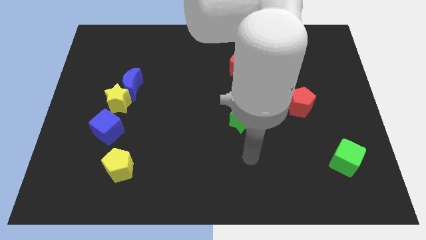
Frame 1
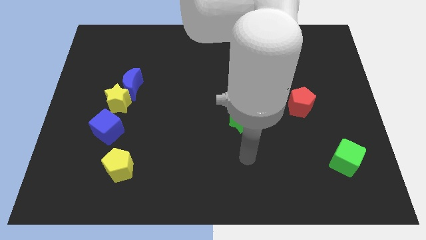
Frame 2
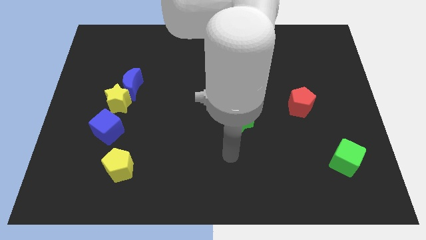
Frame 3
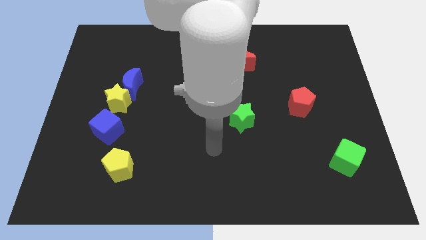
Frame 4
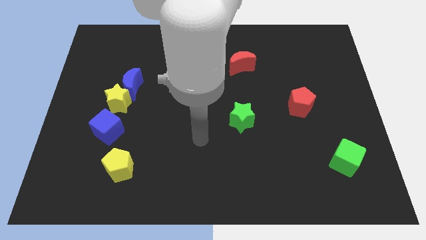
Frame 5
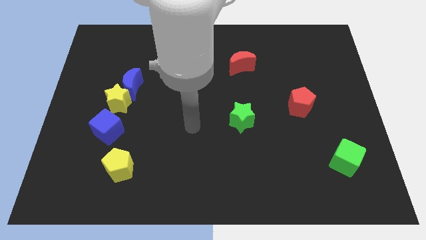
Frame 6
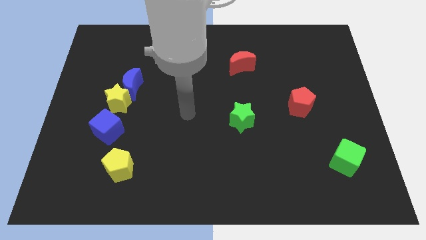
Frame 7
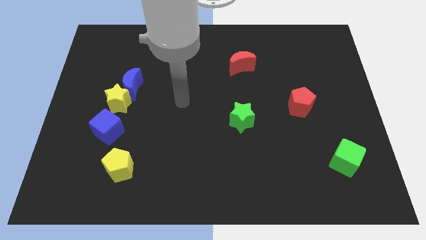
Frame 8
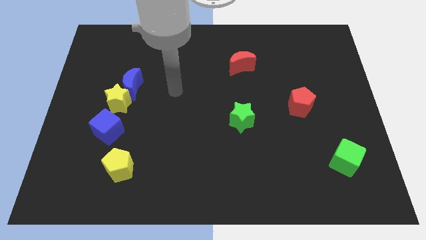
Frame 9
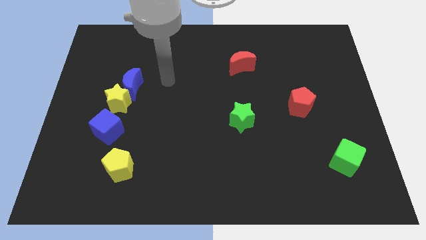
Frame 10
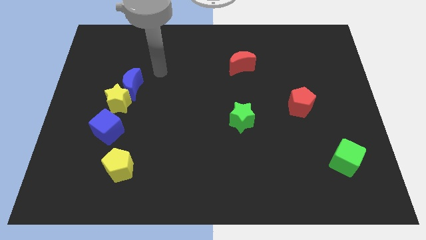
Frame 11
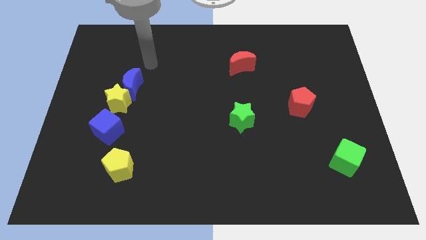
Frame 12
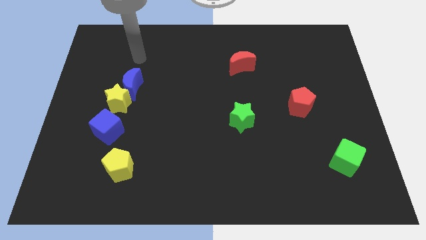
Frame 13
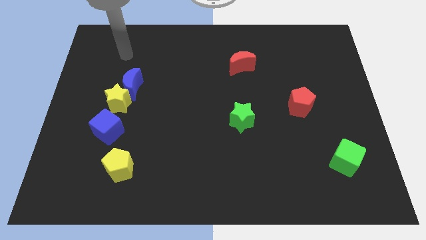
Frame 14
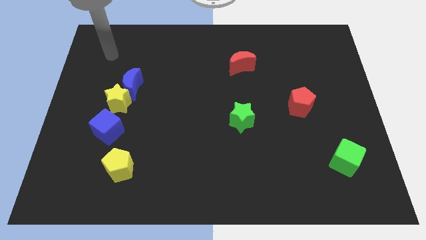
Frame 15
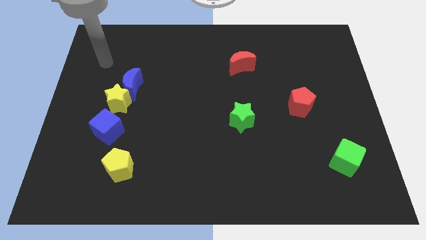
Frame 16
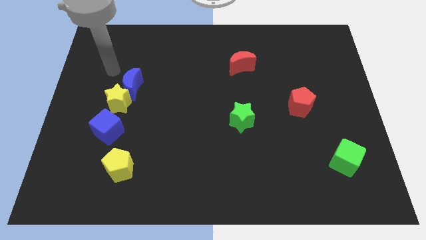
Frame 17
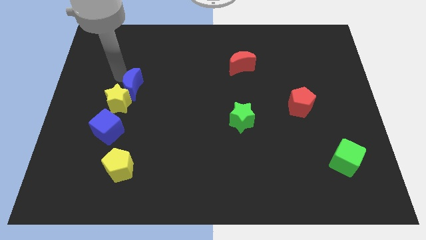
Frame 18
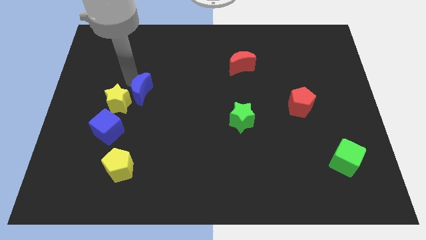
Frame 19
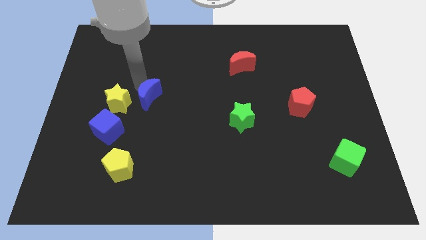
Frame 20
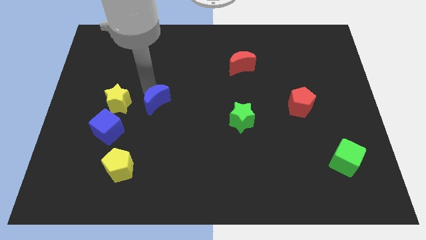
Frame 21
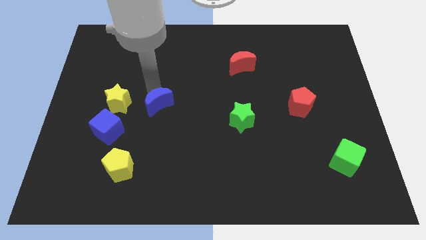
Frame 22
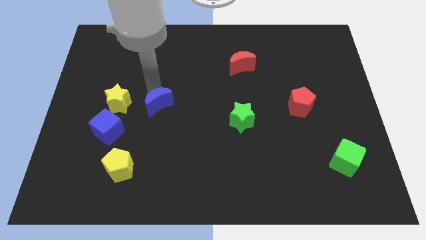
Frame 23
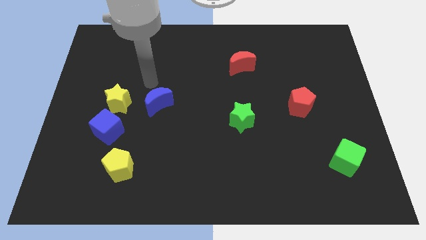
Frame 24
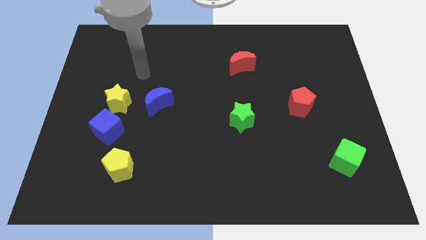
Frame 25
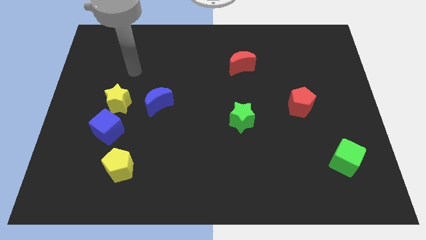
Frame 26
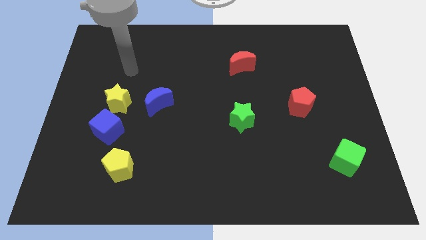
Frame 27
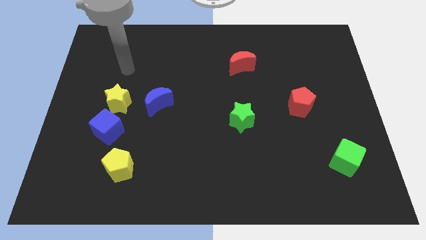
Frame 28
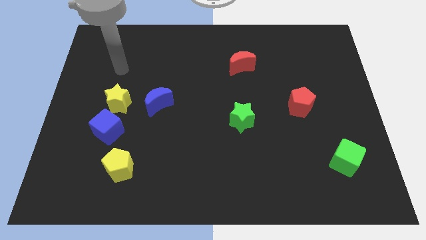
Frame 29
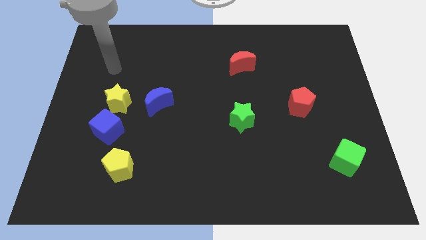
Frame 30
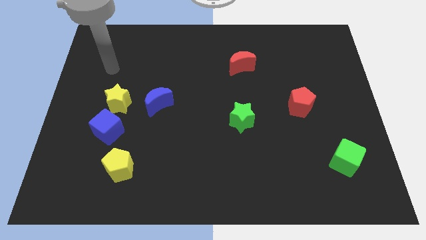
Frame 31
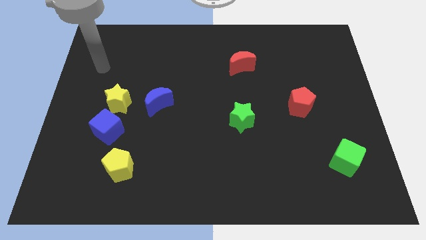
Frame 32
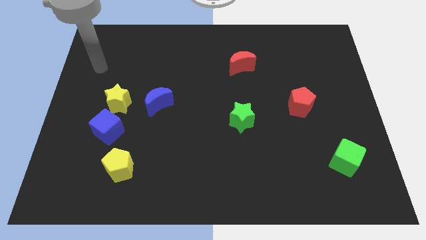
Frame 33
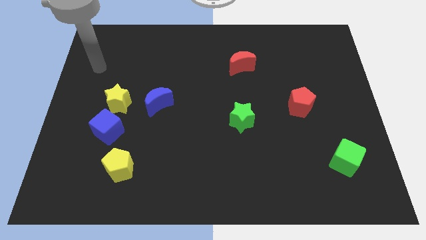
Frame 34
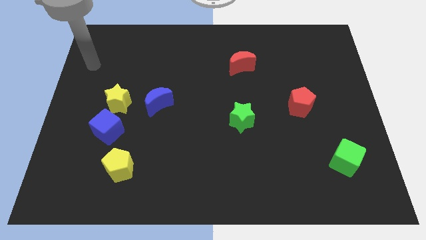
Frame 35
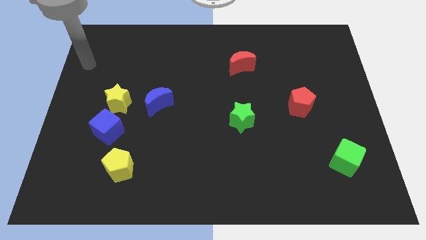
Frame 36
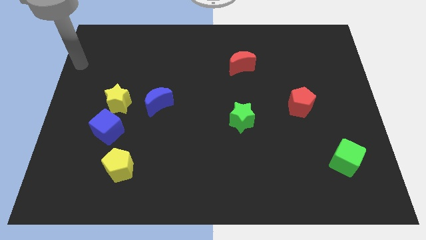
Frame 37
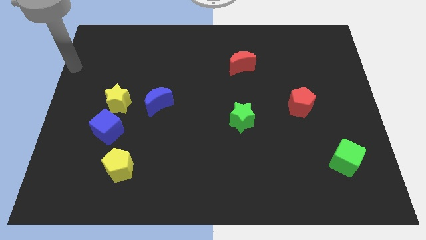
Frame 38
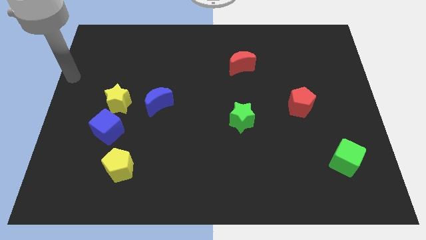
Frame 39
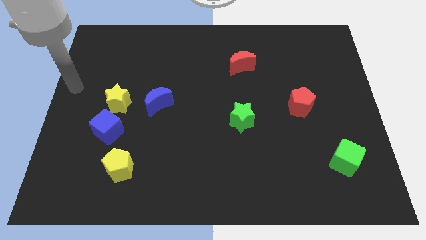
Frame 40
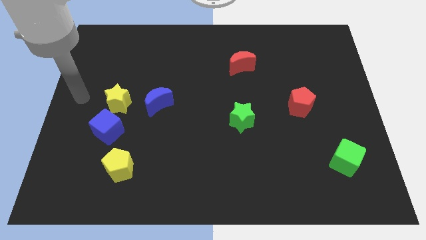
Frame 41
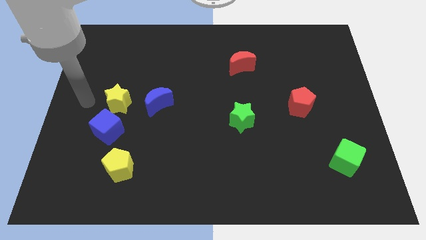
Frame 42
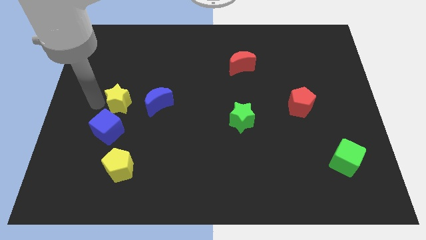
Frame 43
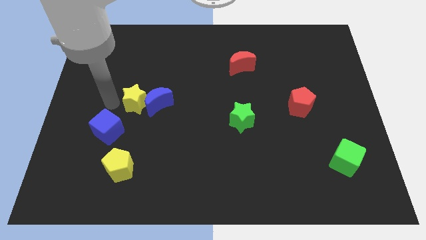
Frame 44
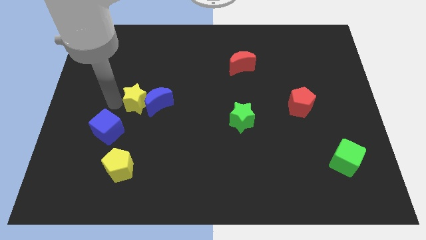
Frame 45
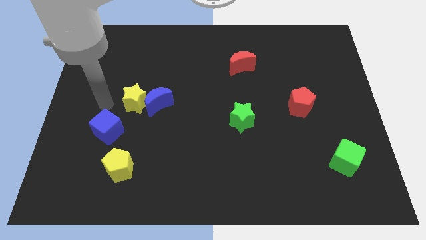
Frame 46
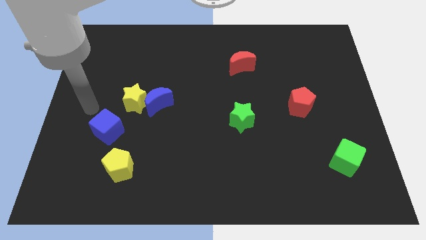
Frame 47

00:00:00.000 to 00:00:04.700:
place yellow star to the left side of the blue moon

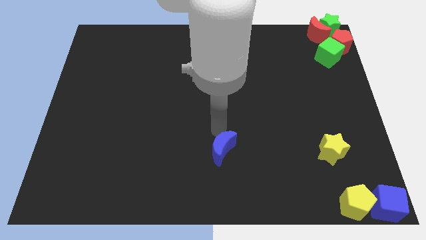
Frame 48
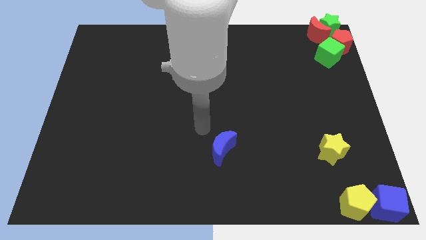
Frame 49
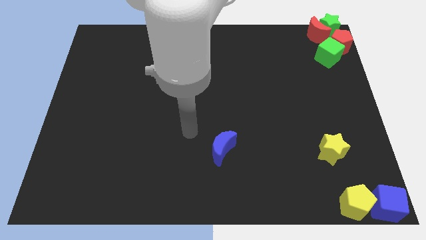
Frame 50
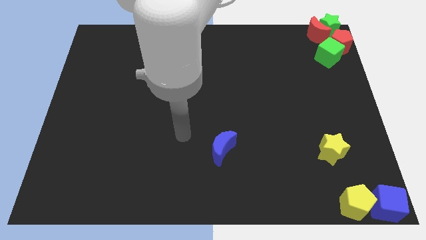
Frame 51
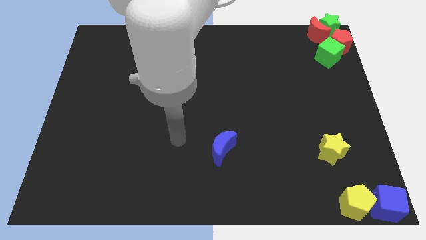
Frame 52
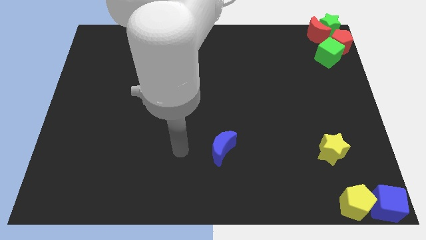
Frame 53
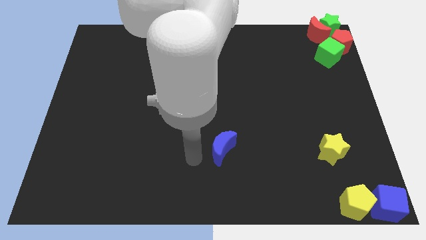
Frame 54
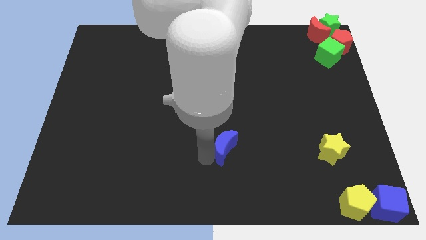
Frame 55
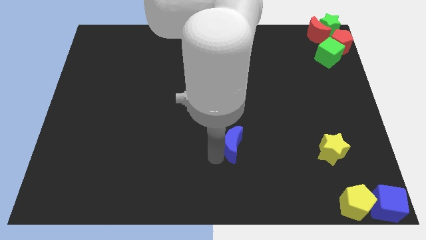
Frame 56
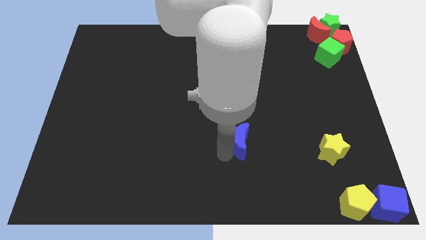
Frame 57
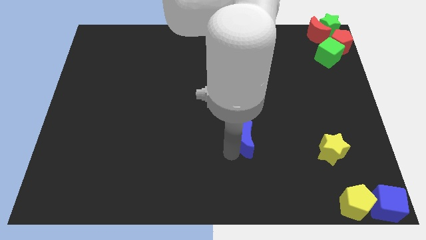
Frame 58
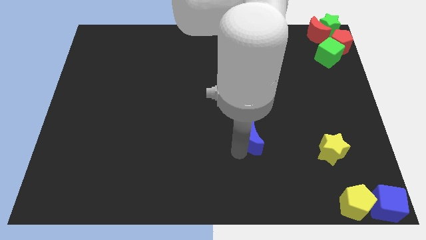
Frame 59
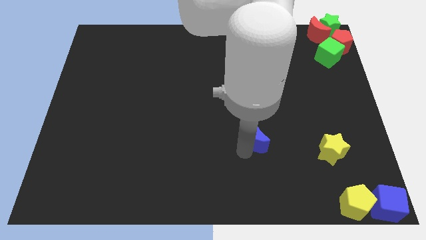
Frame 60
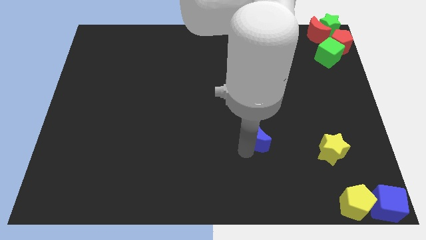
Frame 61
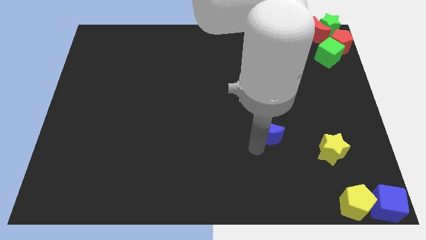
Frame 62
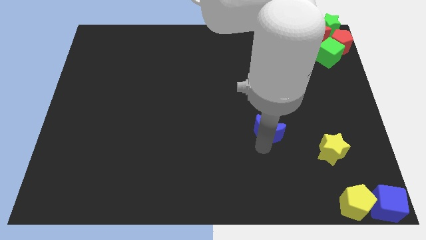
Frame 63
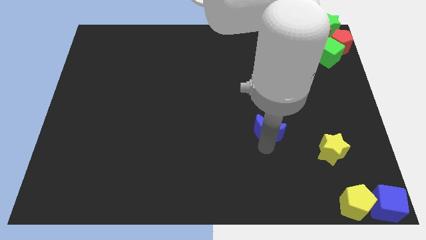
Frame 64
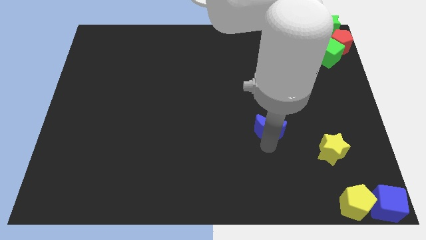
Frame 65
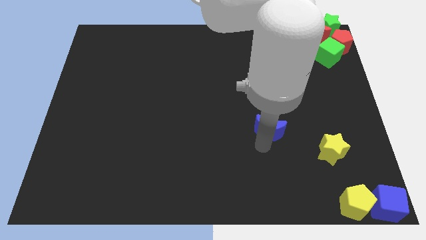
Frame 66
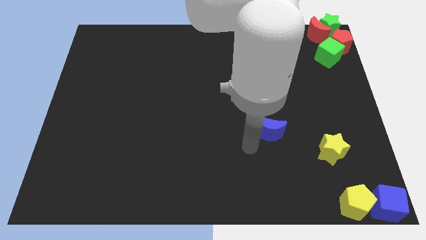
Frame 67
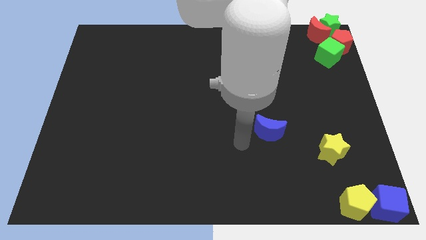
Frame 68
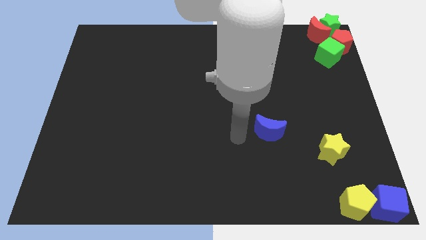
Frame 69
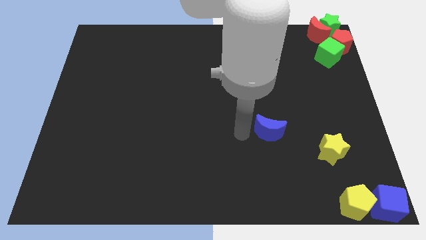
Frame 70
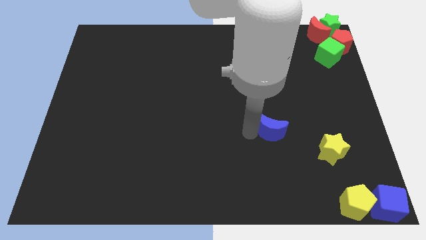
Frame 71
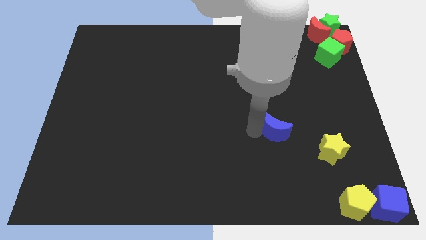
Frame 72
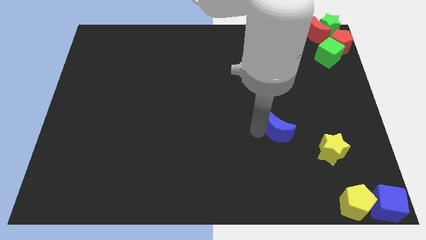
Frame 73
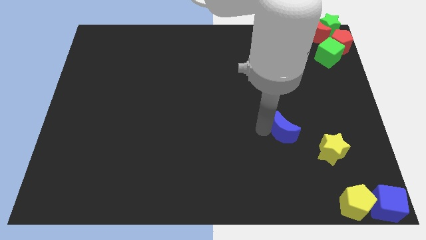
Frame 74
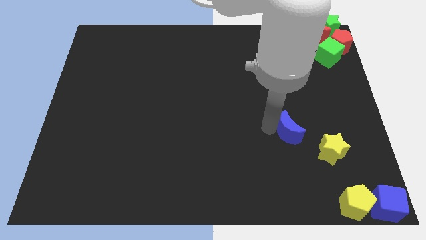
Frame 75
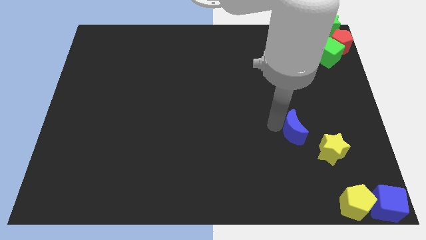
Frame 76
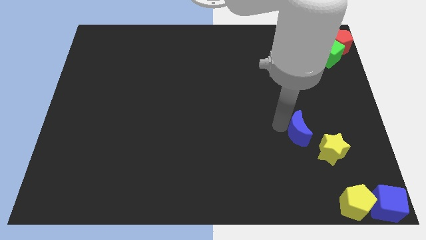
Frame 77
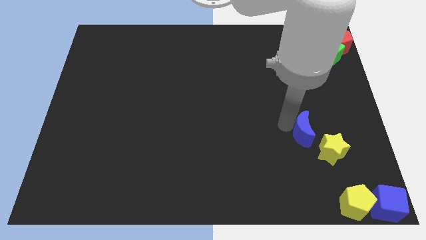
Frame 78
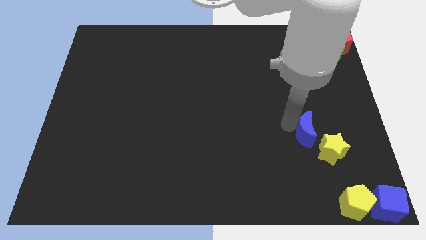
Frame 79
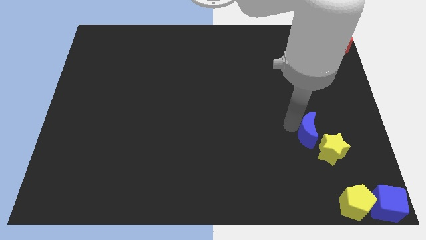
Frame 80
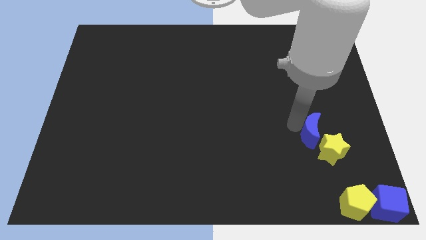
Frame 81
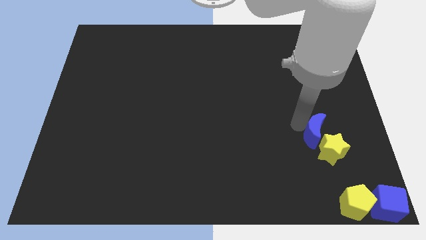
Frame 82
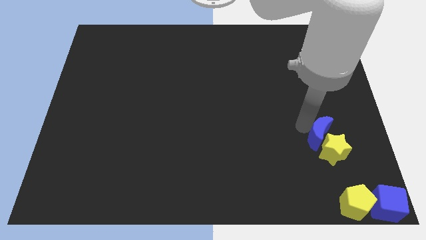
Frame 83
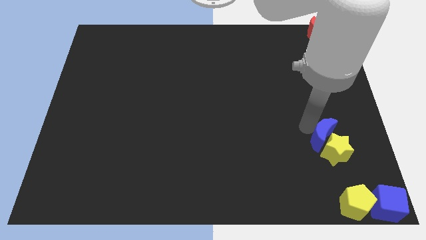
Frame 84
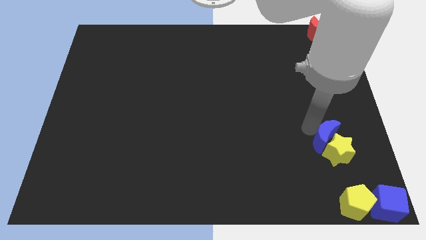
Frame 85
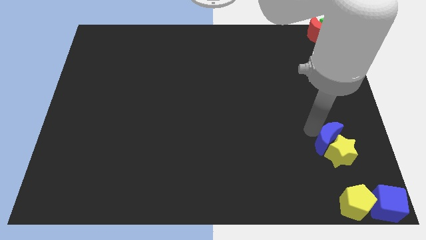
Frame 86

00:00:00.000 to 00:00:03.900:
put the blue moon into the yellow star

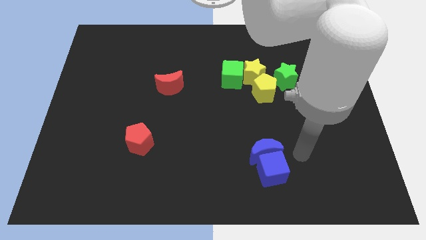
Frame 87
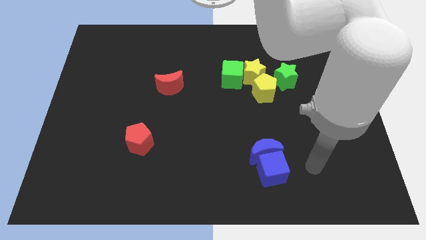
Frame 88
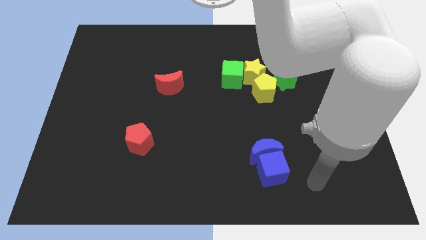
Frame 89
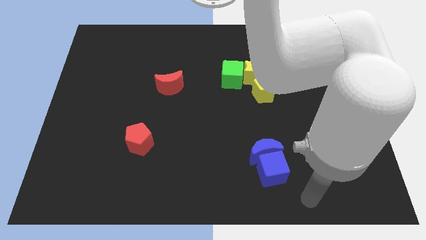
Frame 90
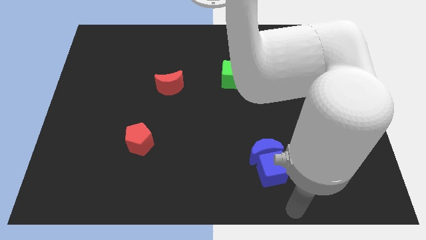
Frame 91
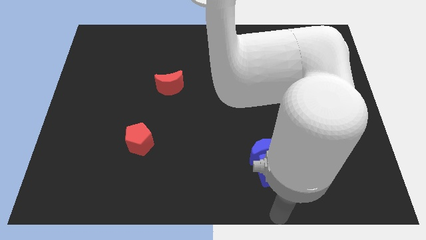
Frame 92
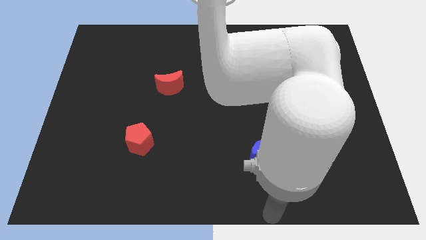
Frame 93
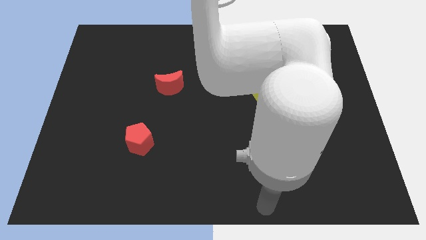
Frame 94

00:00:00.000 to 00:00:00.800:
place your arm below blue cube
